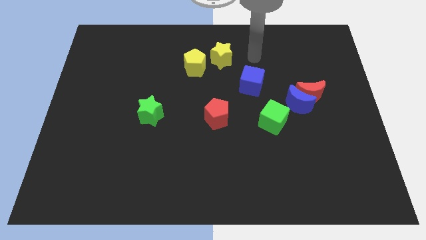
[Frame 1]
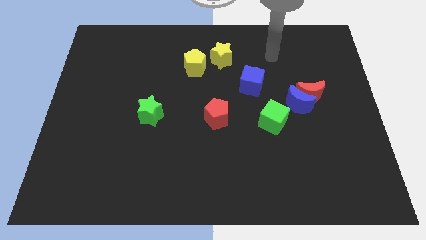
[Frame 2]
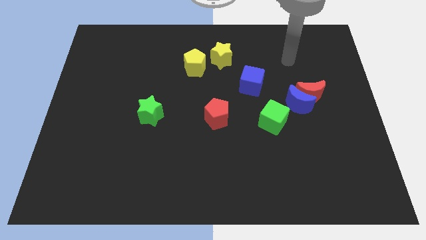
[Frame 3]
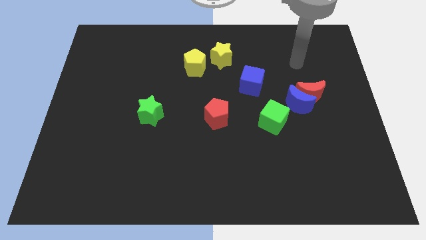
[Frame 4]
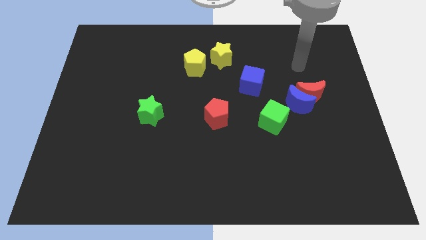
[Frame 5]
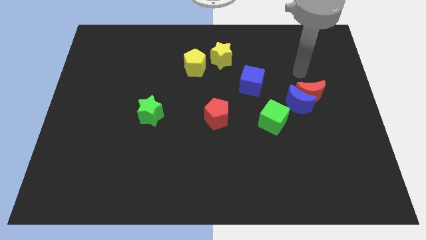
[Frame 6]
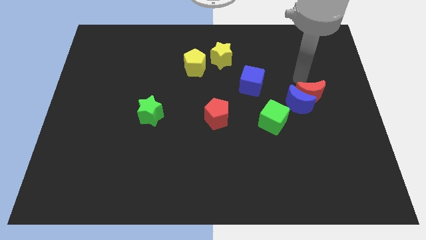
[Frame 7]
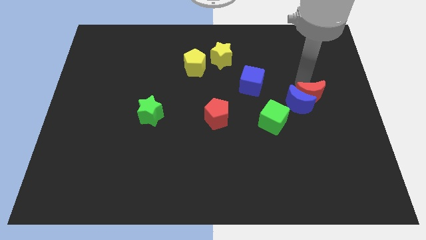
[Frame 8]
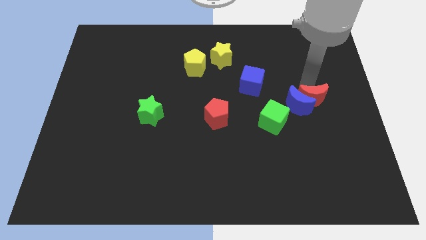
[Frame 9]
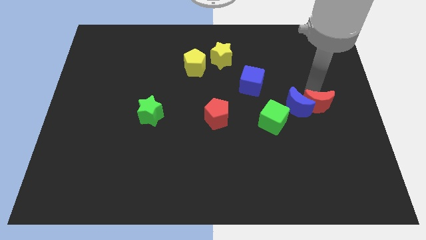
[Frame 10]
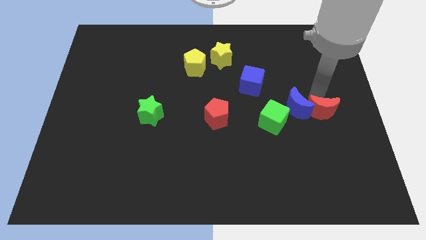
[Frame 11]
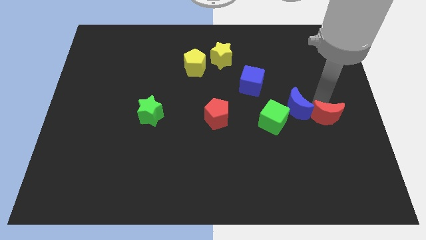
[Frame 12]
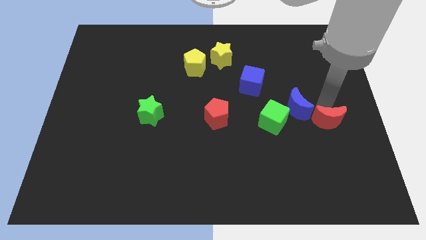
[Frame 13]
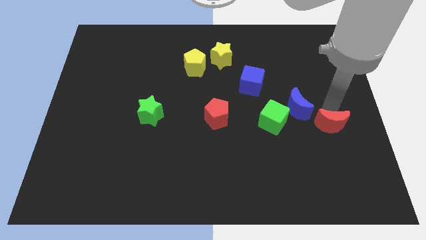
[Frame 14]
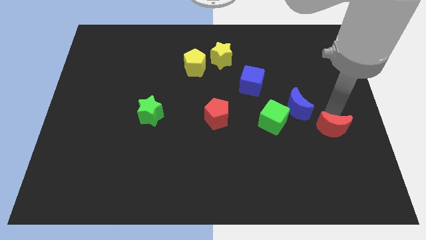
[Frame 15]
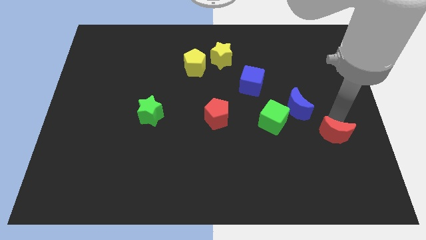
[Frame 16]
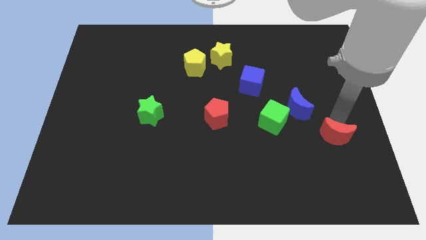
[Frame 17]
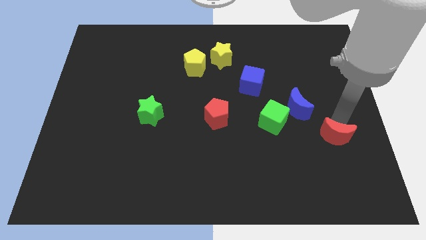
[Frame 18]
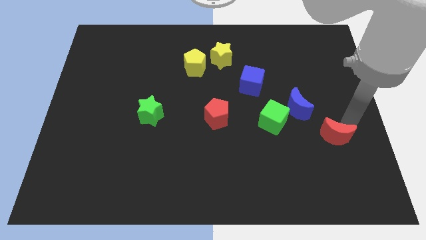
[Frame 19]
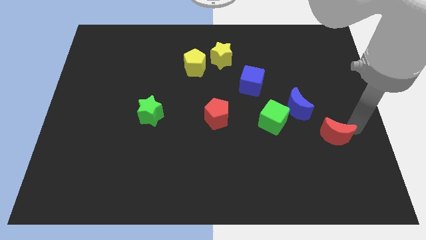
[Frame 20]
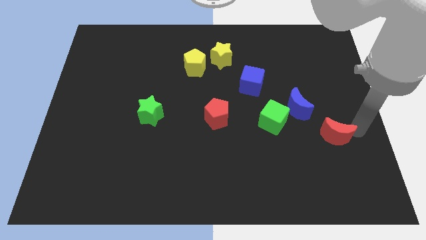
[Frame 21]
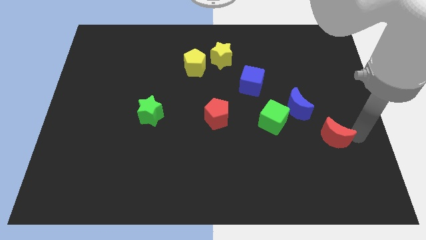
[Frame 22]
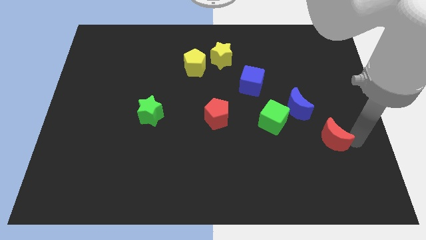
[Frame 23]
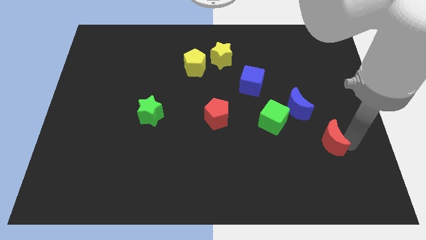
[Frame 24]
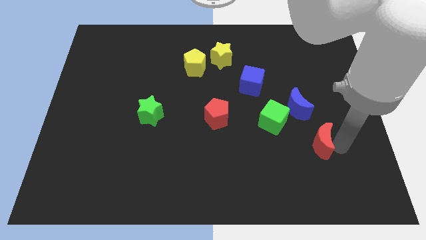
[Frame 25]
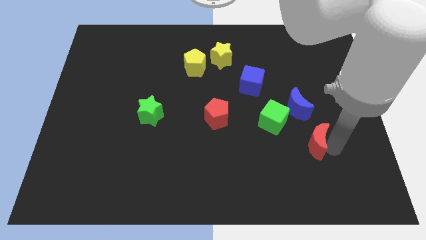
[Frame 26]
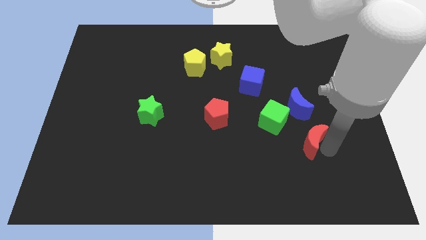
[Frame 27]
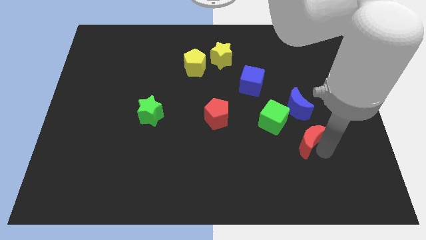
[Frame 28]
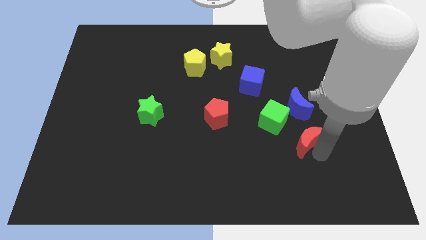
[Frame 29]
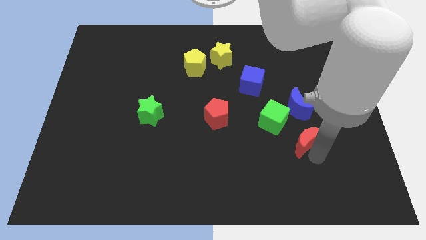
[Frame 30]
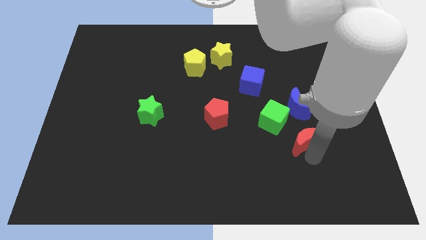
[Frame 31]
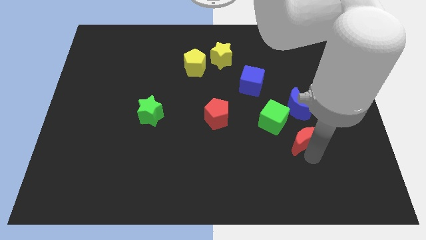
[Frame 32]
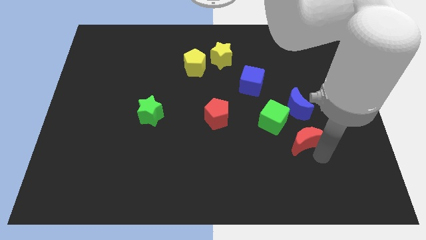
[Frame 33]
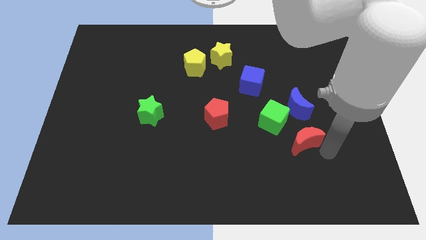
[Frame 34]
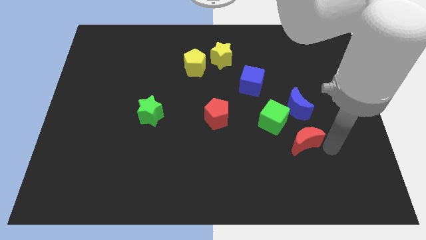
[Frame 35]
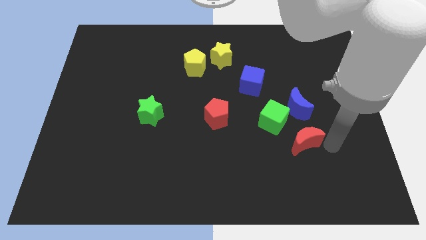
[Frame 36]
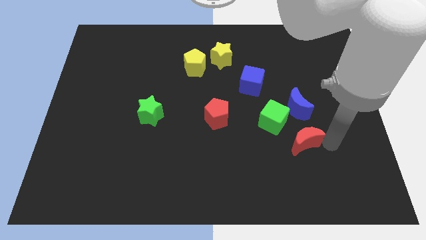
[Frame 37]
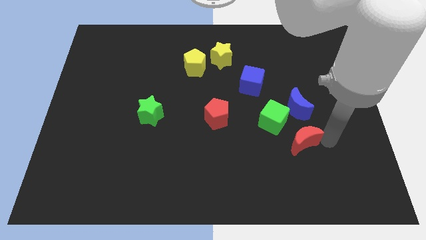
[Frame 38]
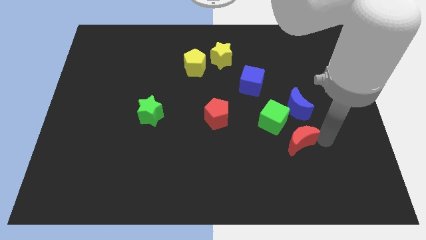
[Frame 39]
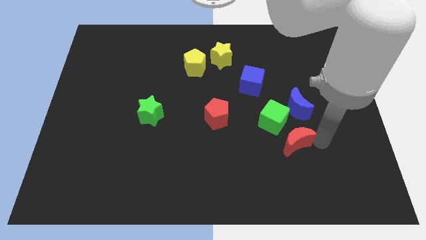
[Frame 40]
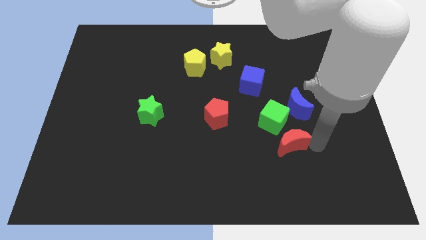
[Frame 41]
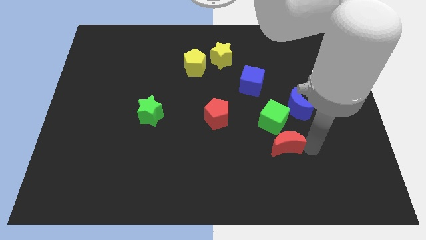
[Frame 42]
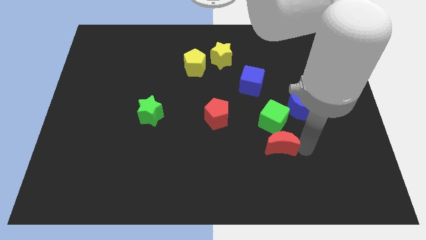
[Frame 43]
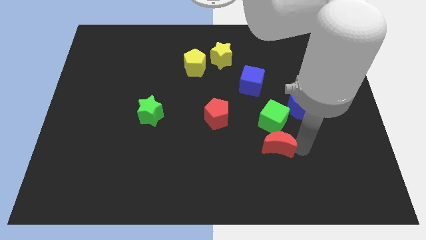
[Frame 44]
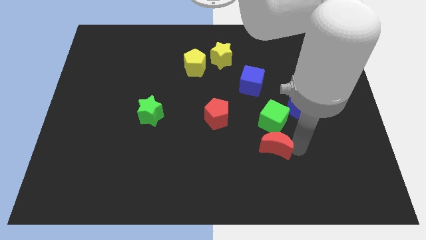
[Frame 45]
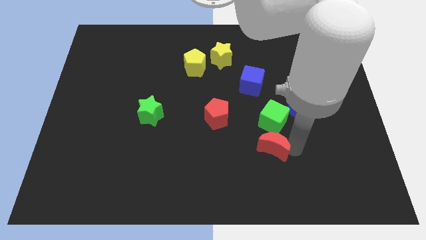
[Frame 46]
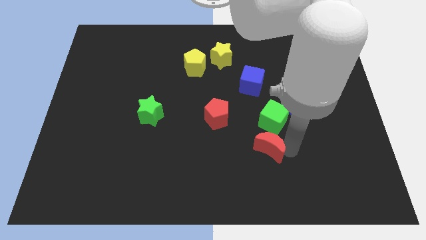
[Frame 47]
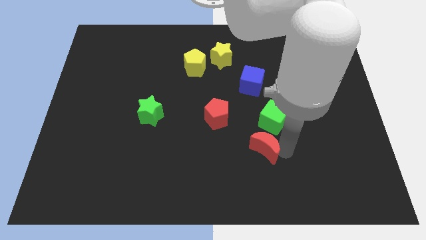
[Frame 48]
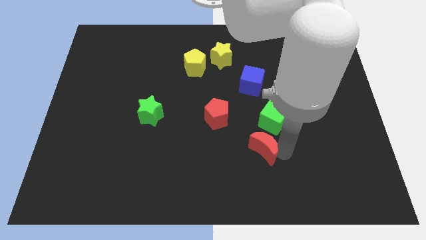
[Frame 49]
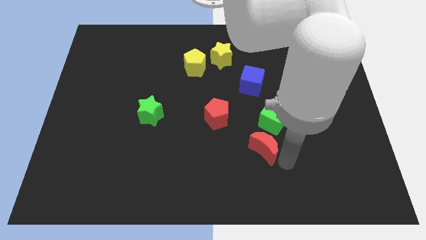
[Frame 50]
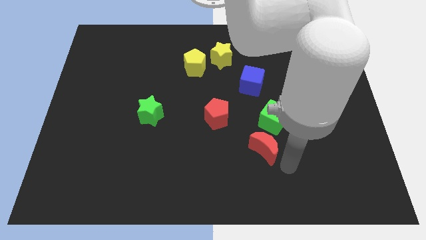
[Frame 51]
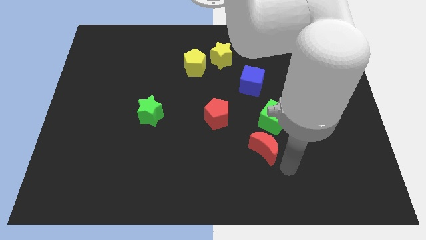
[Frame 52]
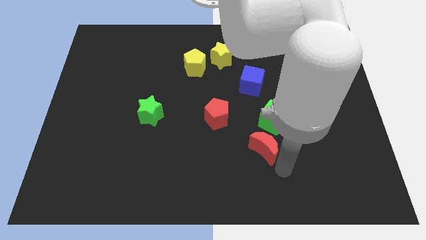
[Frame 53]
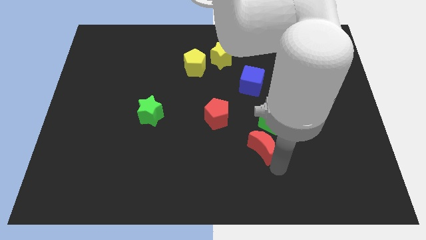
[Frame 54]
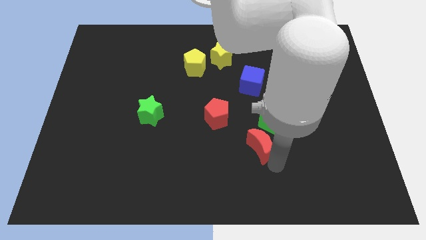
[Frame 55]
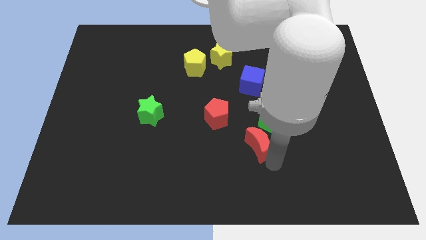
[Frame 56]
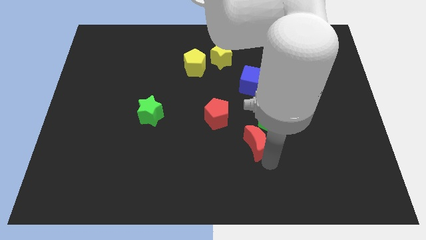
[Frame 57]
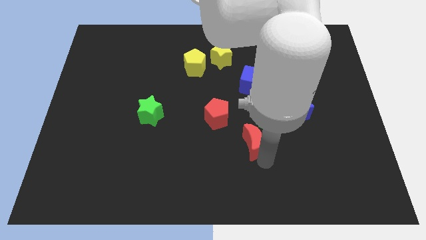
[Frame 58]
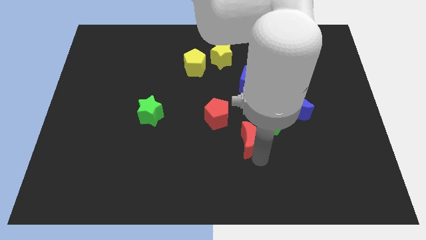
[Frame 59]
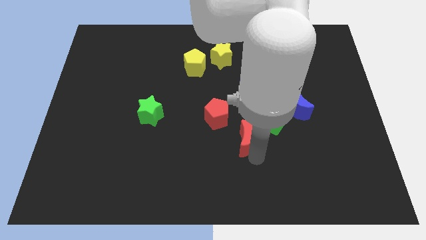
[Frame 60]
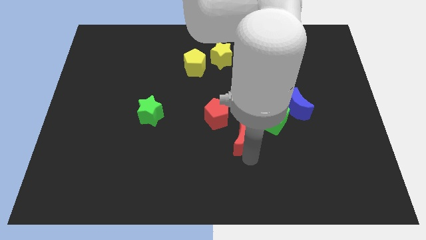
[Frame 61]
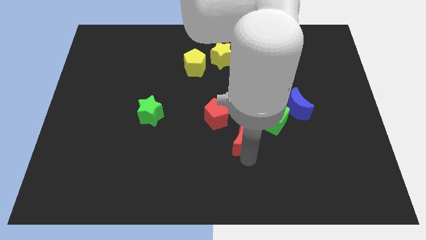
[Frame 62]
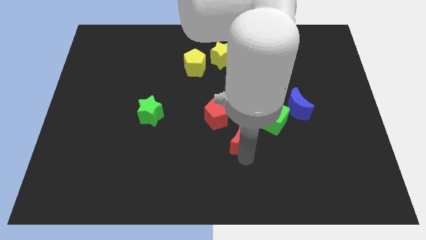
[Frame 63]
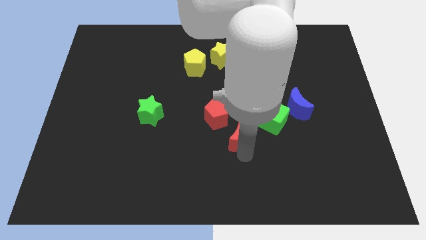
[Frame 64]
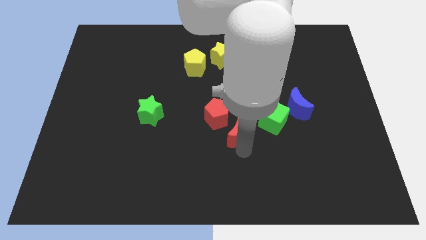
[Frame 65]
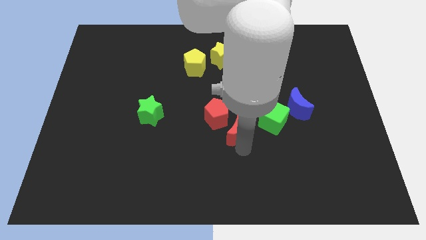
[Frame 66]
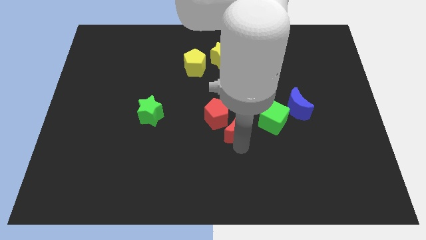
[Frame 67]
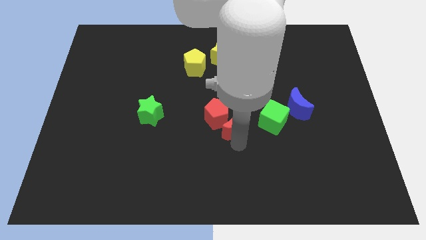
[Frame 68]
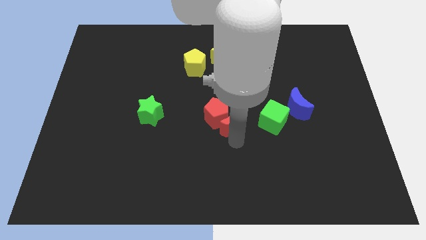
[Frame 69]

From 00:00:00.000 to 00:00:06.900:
put the red moon towards the red pentagon

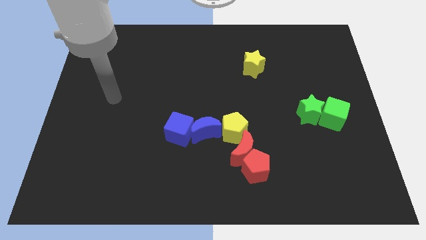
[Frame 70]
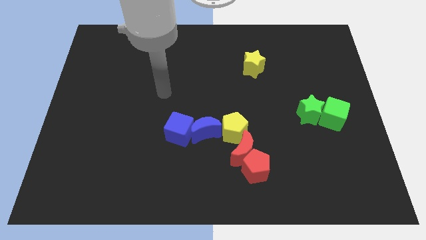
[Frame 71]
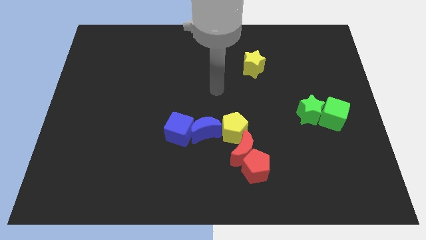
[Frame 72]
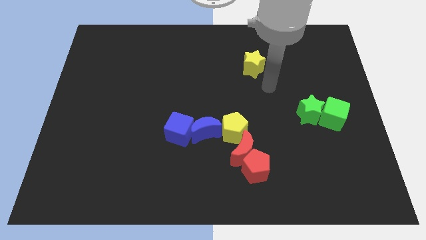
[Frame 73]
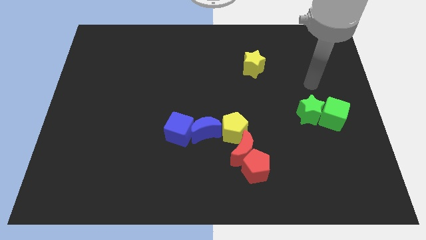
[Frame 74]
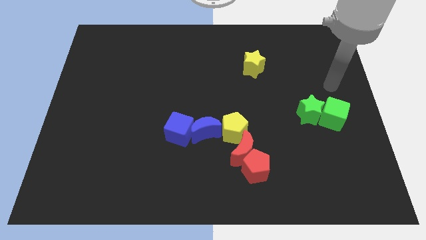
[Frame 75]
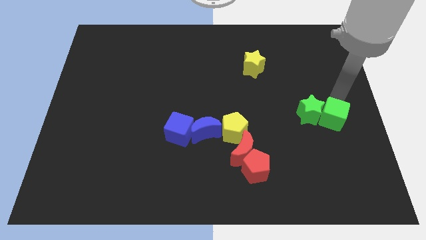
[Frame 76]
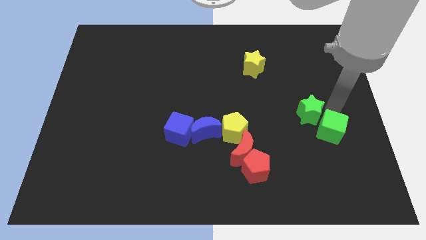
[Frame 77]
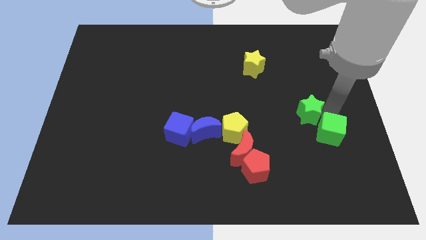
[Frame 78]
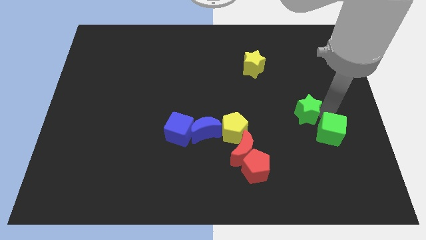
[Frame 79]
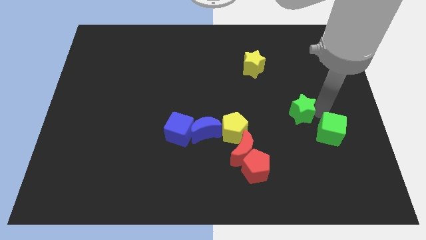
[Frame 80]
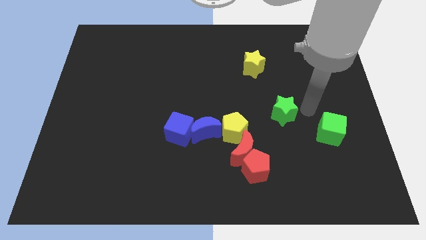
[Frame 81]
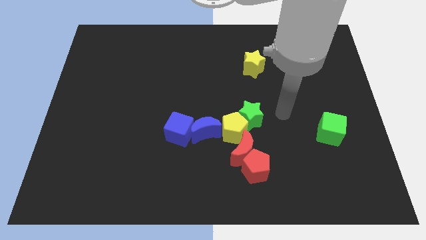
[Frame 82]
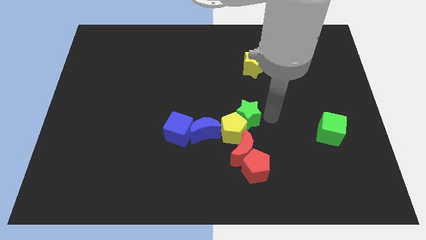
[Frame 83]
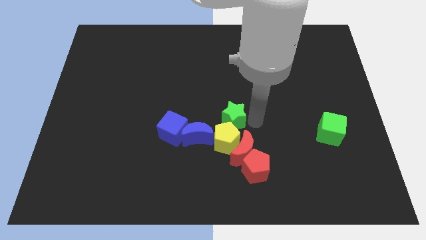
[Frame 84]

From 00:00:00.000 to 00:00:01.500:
put the green star towards the yellow pentagon

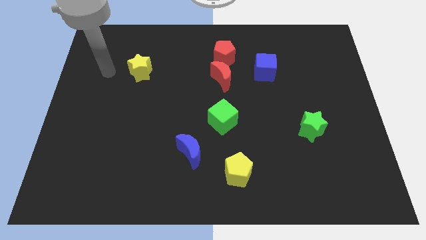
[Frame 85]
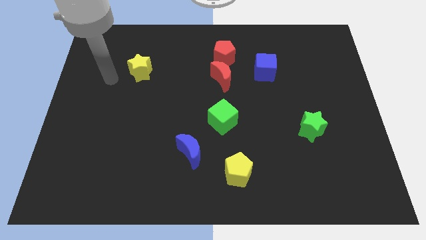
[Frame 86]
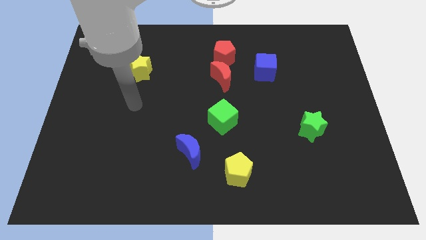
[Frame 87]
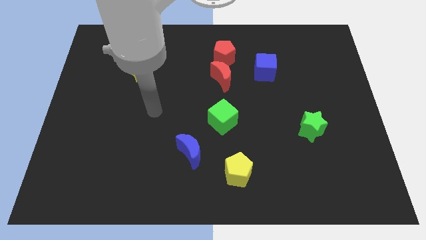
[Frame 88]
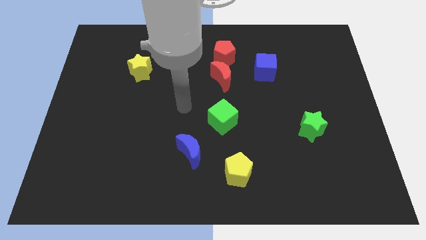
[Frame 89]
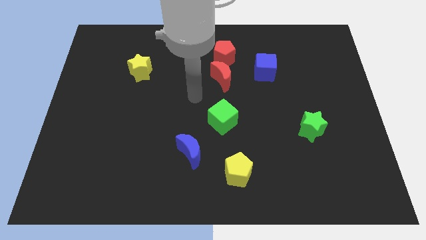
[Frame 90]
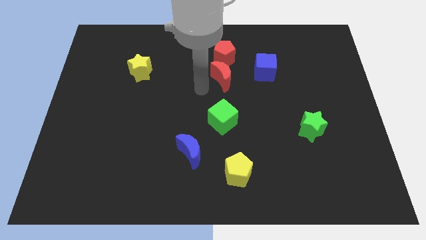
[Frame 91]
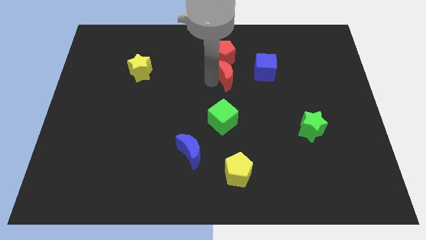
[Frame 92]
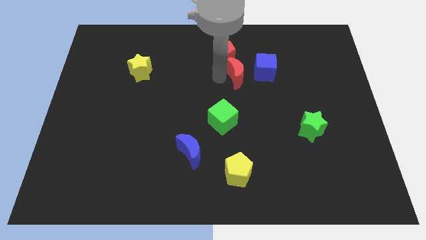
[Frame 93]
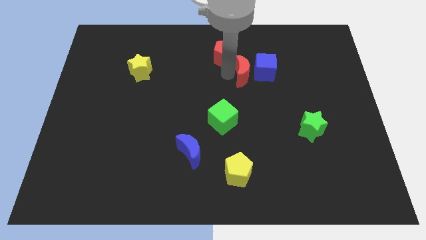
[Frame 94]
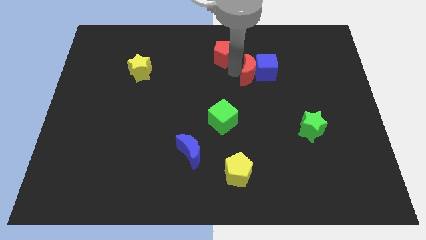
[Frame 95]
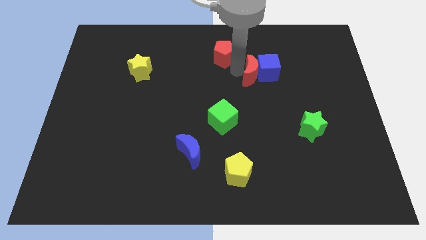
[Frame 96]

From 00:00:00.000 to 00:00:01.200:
move the red moon next to the blue cube
